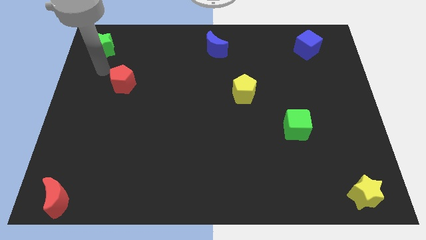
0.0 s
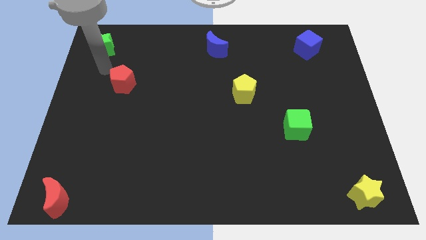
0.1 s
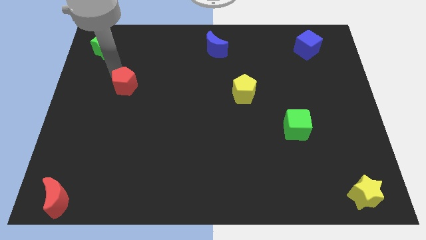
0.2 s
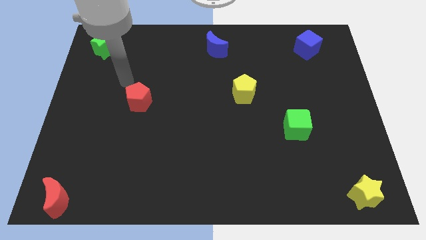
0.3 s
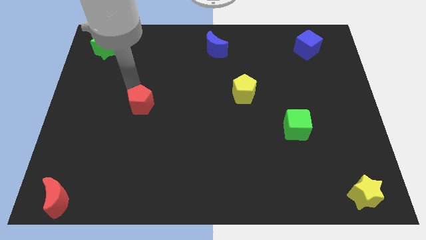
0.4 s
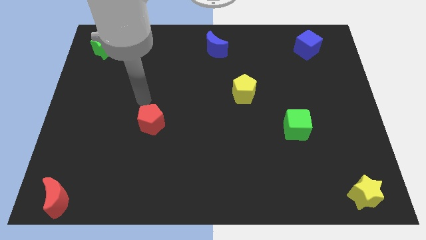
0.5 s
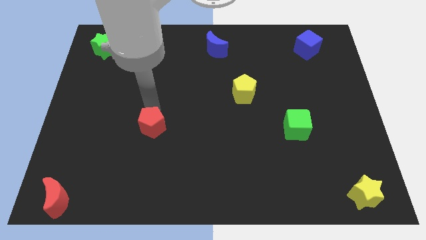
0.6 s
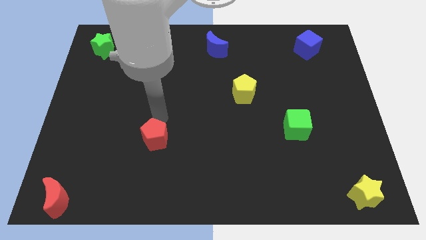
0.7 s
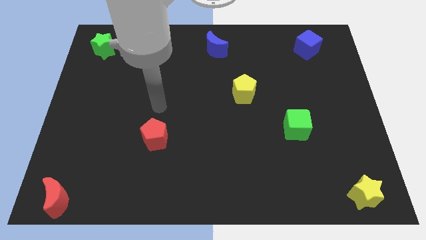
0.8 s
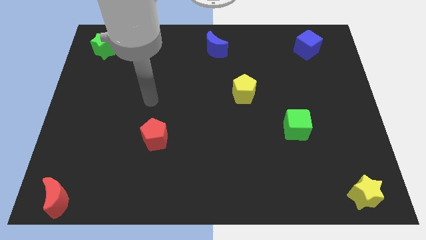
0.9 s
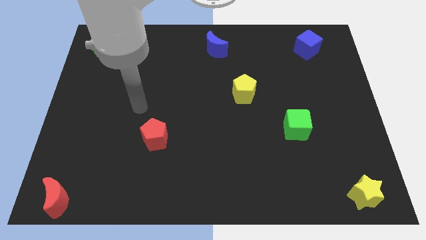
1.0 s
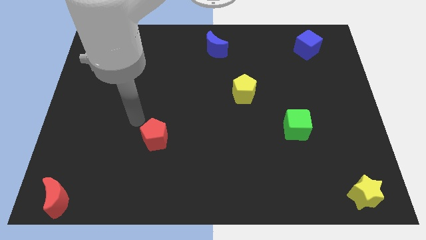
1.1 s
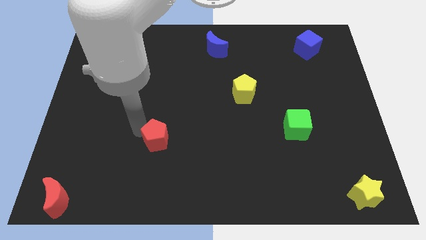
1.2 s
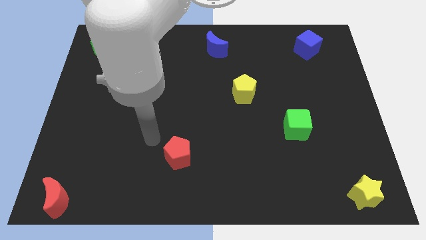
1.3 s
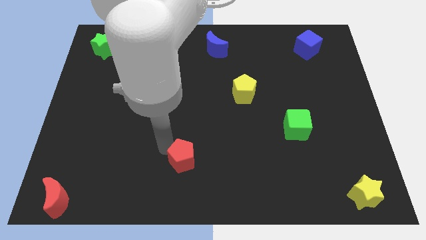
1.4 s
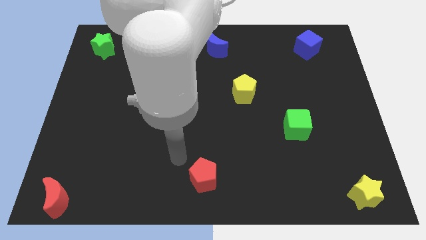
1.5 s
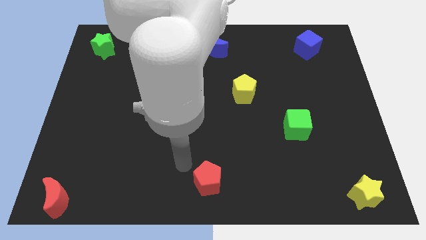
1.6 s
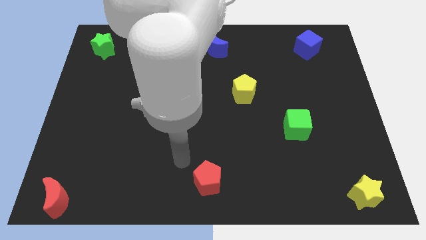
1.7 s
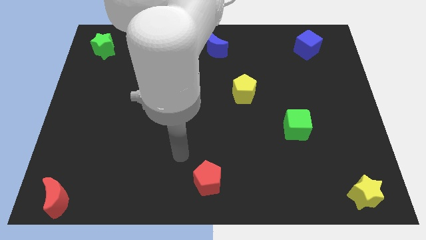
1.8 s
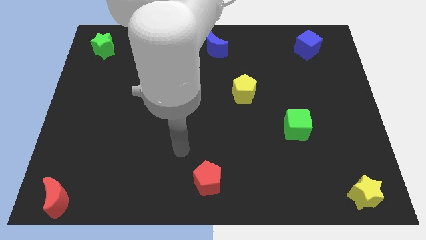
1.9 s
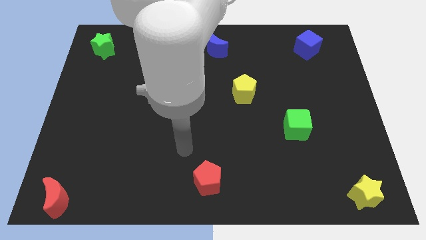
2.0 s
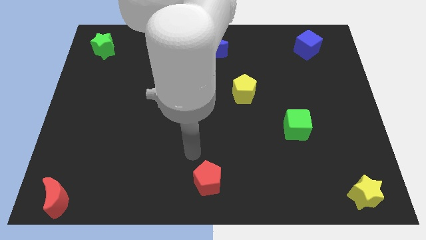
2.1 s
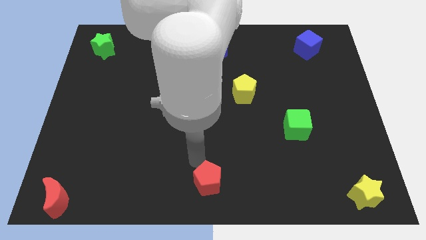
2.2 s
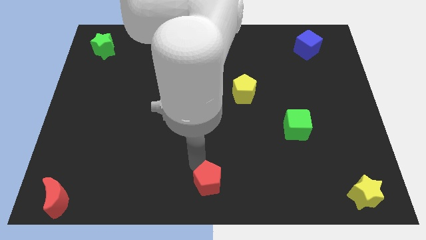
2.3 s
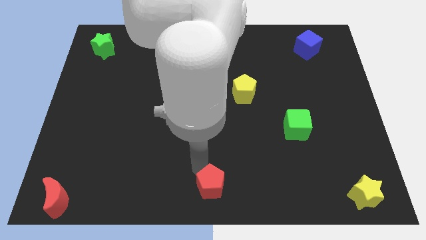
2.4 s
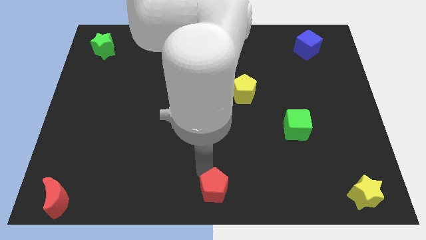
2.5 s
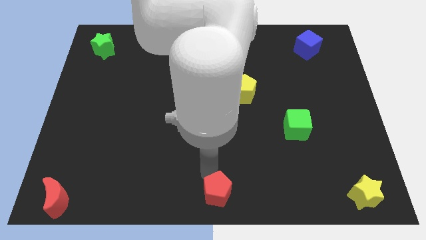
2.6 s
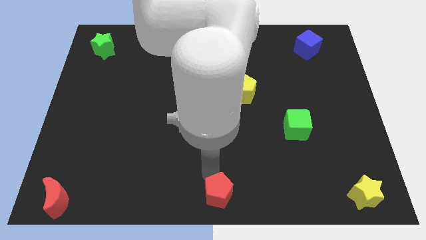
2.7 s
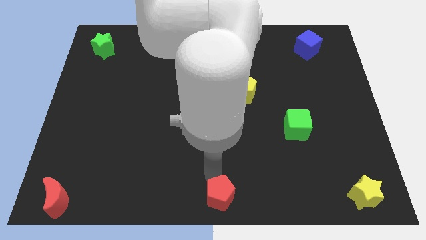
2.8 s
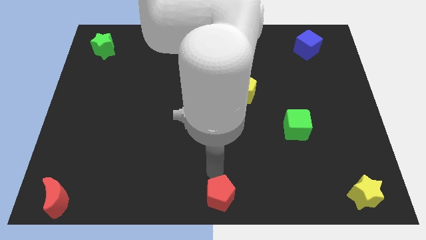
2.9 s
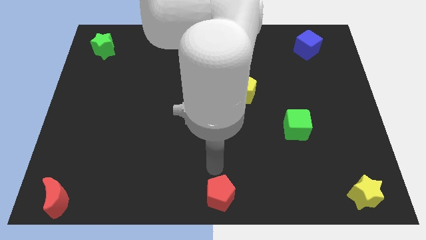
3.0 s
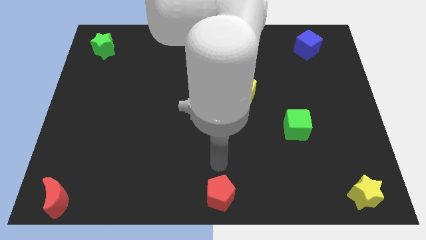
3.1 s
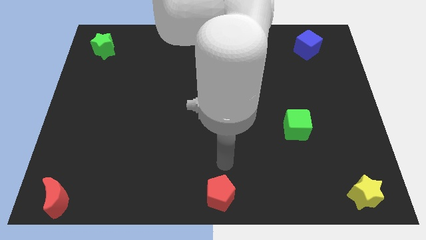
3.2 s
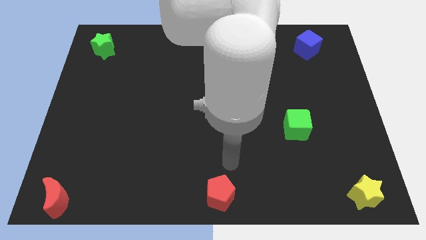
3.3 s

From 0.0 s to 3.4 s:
move the red pentagon to bottom center

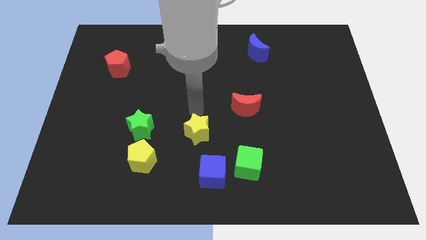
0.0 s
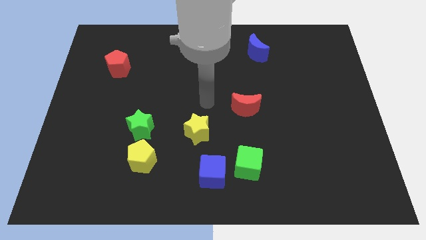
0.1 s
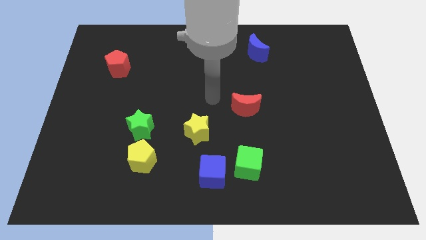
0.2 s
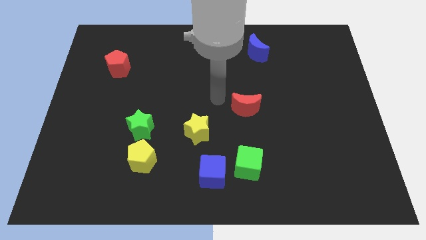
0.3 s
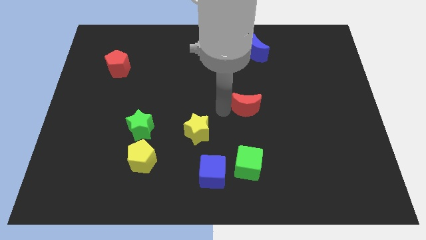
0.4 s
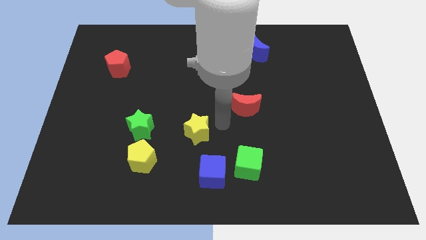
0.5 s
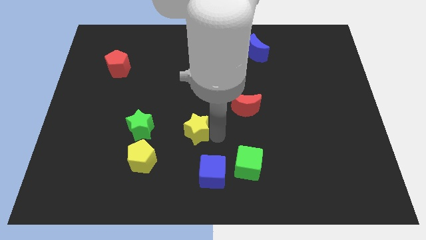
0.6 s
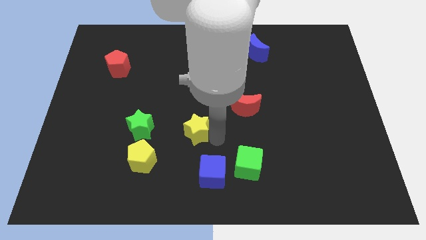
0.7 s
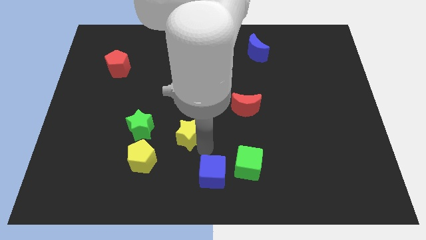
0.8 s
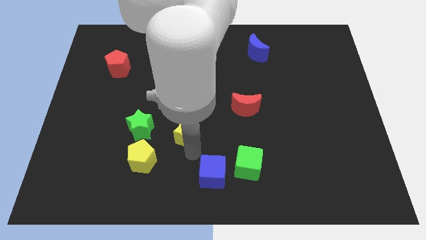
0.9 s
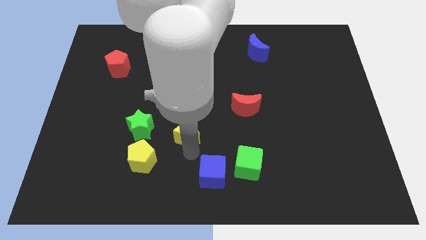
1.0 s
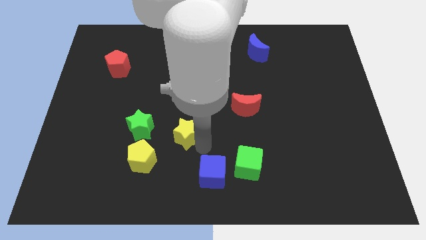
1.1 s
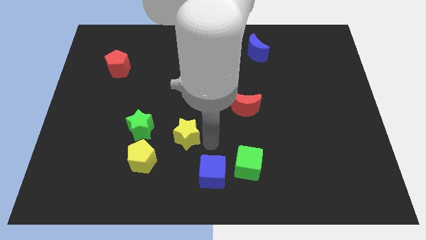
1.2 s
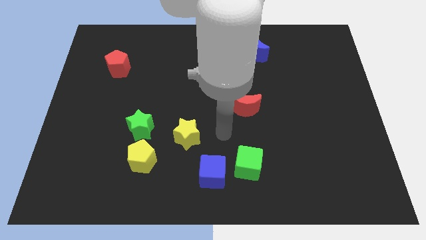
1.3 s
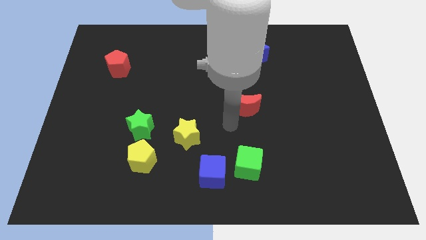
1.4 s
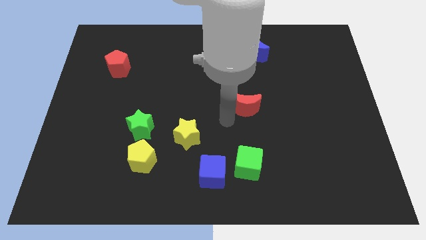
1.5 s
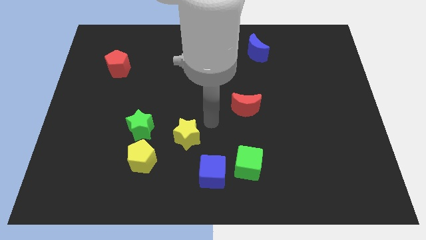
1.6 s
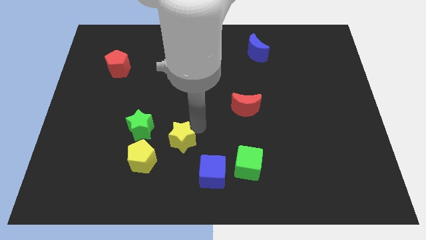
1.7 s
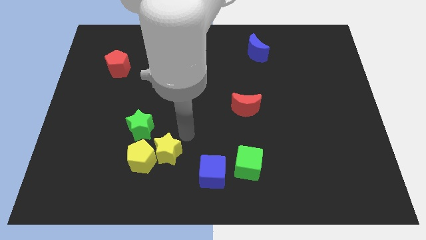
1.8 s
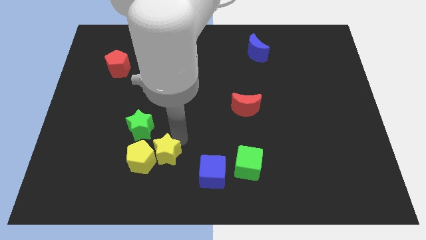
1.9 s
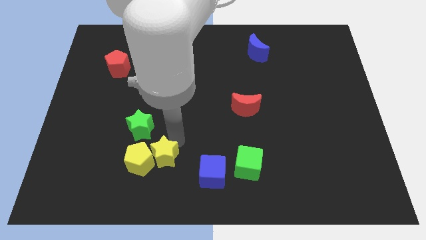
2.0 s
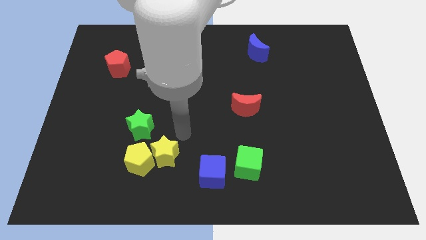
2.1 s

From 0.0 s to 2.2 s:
place the yellow star to the bottom right of the green star

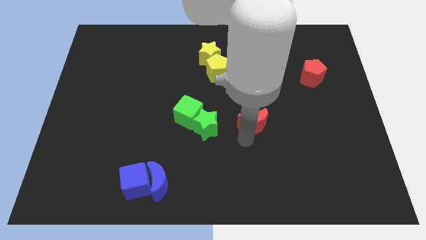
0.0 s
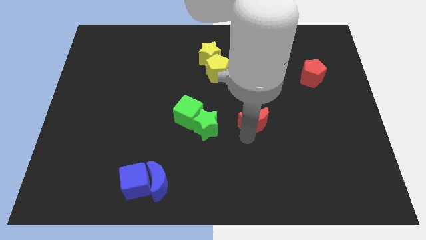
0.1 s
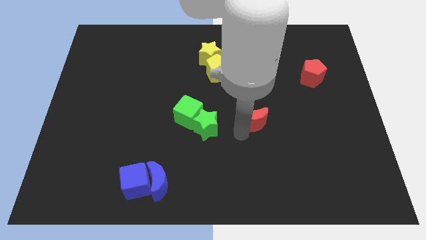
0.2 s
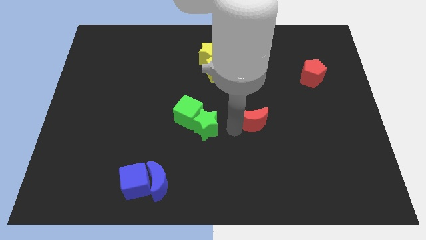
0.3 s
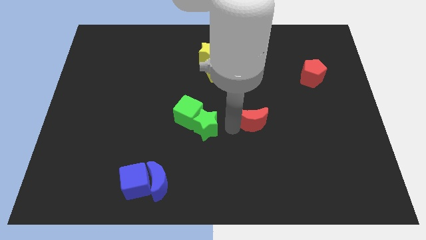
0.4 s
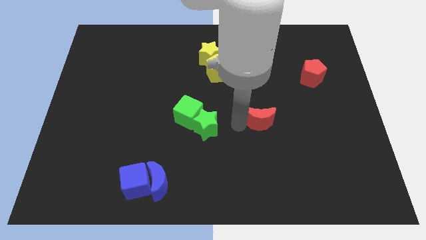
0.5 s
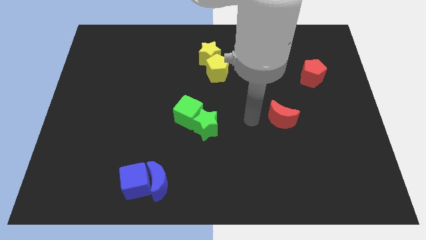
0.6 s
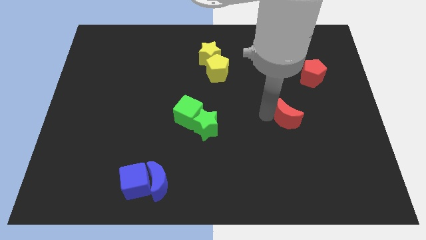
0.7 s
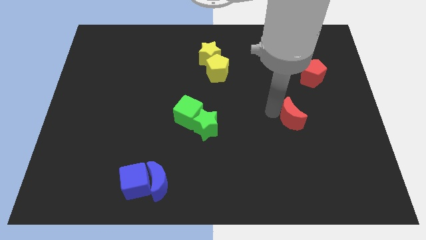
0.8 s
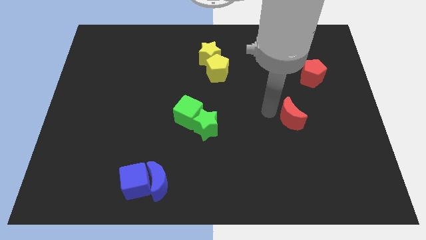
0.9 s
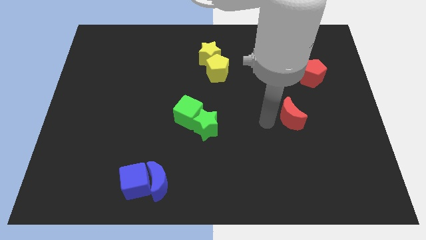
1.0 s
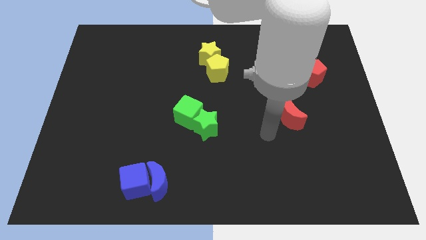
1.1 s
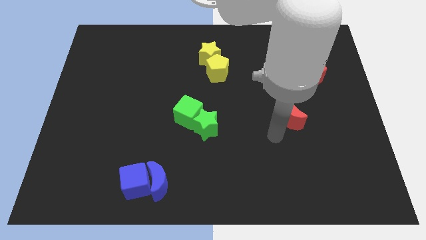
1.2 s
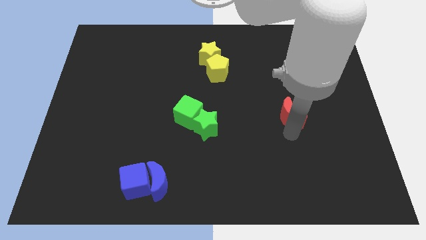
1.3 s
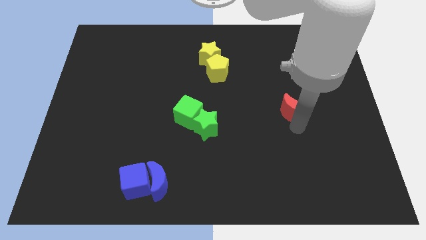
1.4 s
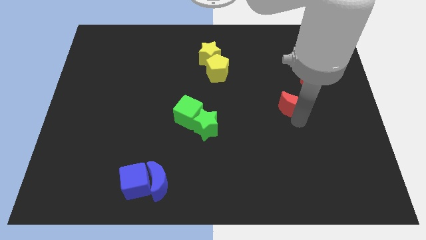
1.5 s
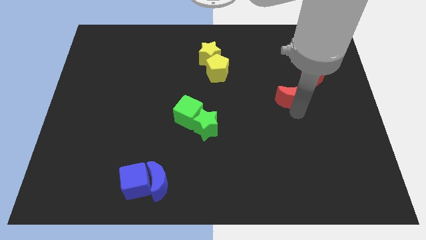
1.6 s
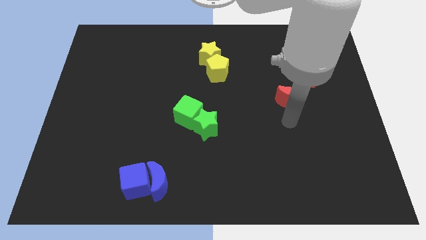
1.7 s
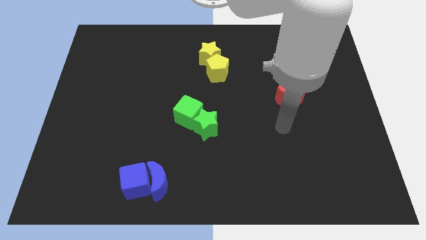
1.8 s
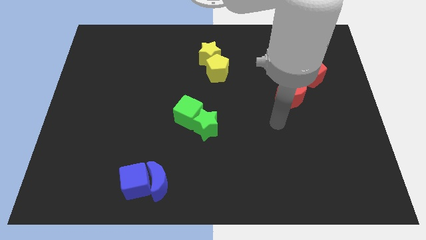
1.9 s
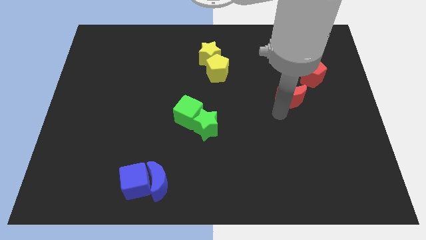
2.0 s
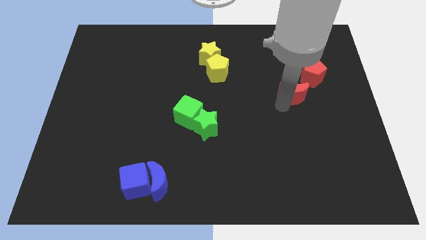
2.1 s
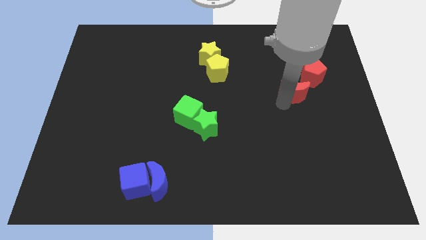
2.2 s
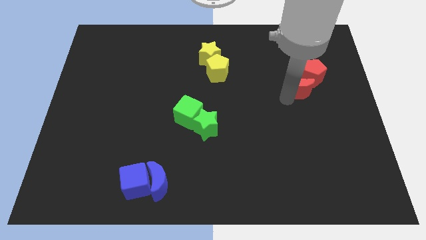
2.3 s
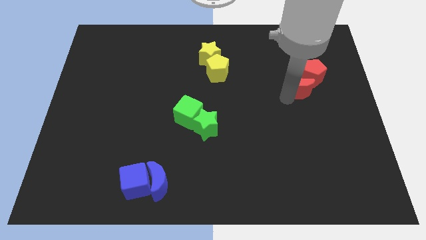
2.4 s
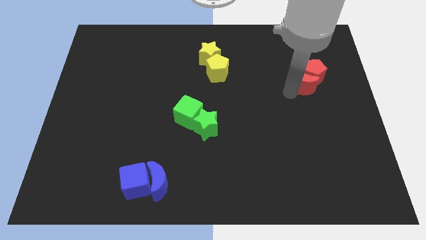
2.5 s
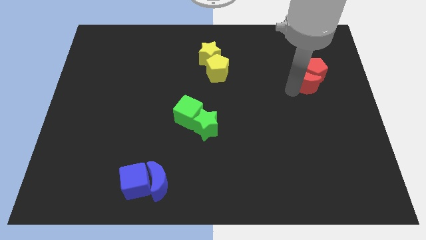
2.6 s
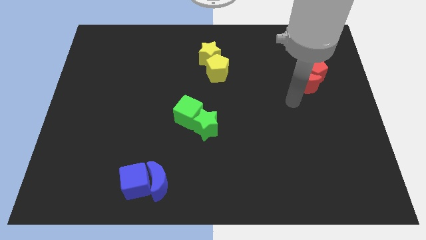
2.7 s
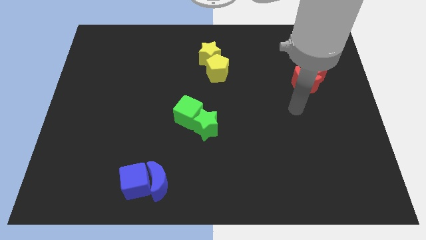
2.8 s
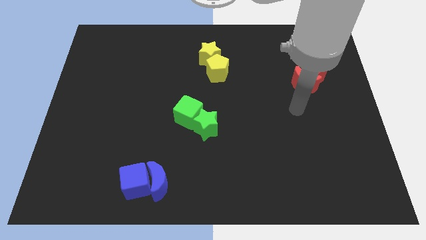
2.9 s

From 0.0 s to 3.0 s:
push the red crescent into the bottom side of the red pentagon

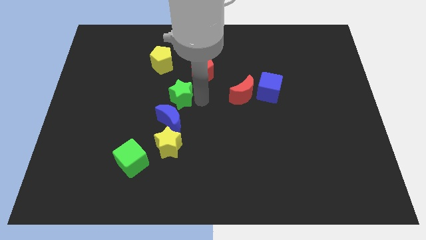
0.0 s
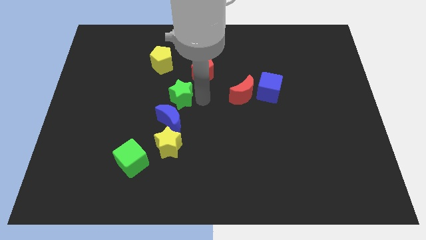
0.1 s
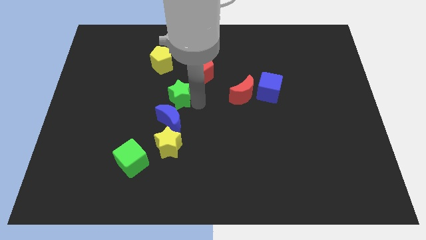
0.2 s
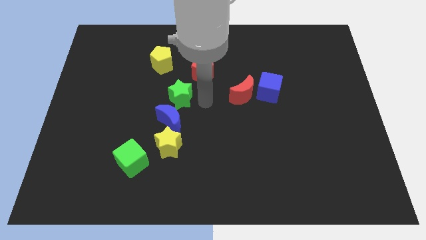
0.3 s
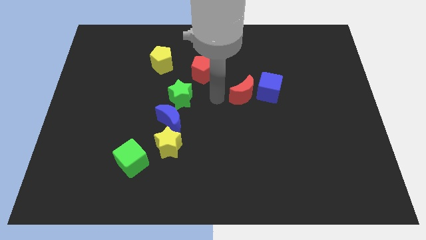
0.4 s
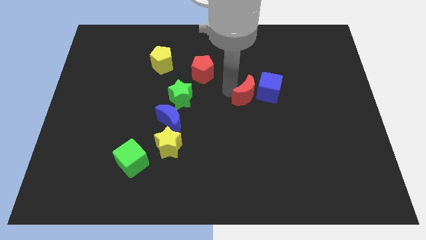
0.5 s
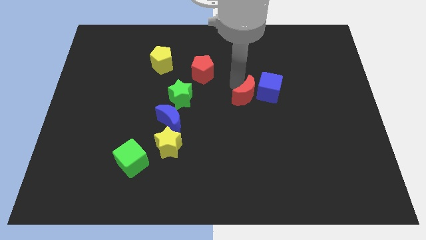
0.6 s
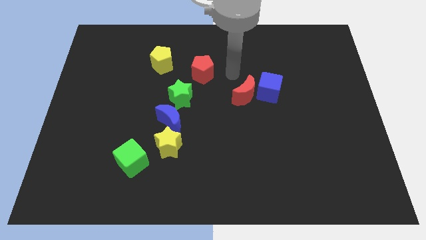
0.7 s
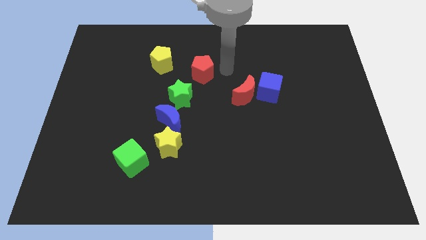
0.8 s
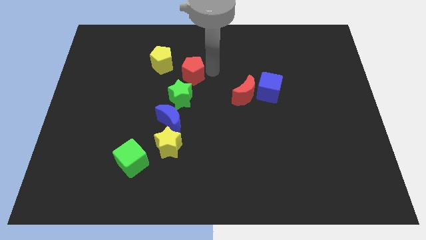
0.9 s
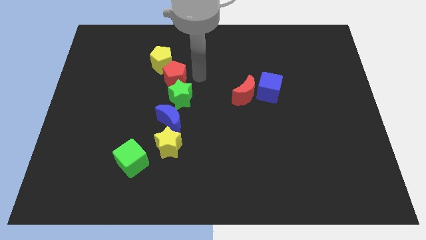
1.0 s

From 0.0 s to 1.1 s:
place the red pentagon above the green star
